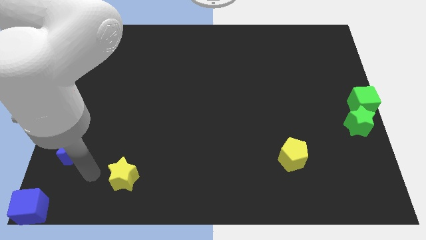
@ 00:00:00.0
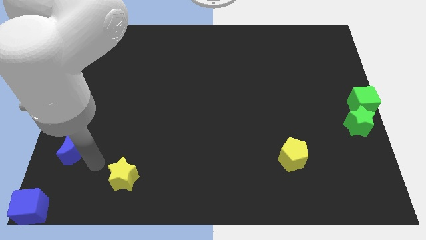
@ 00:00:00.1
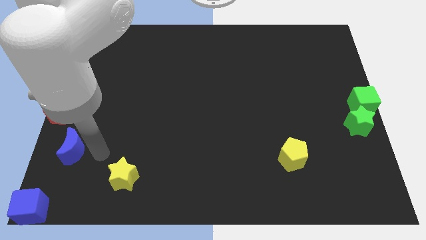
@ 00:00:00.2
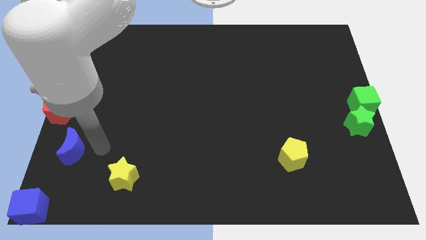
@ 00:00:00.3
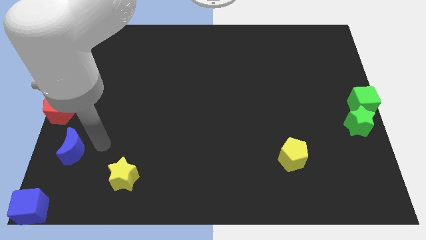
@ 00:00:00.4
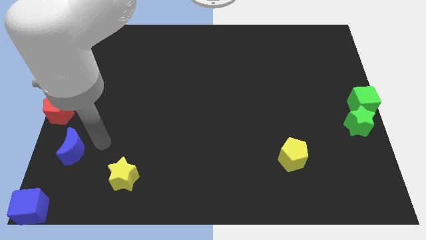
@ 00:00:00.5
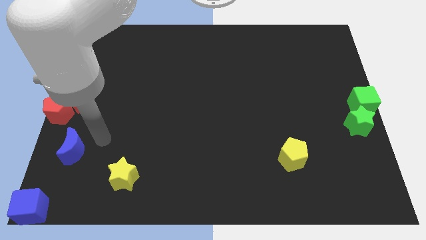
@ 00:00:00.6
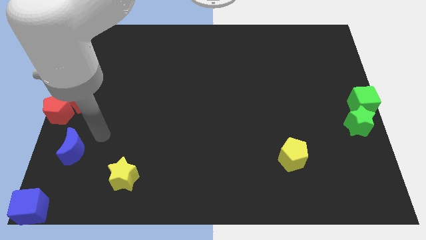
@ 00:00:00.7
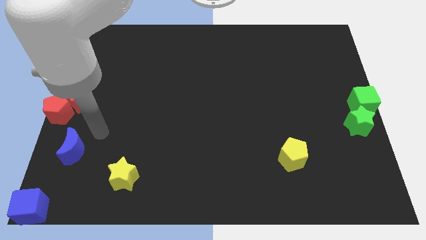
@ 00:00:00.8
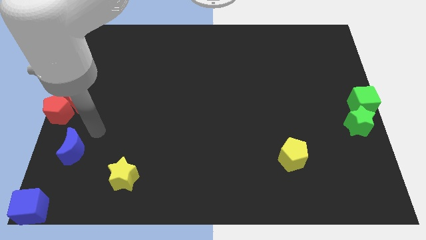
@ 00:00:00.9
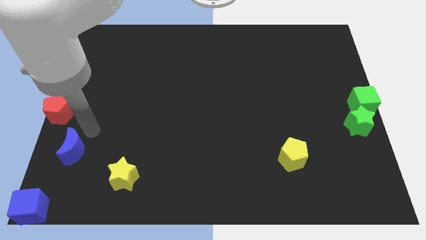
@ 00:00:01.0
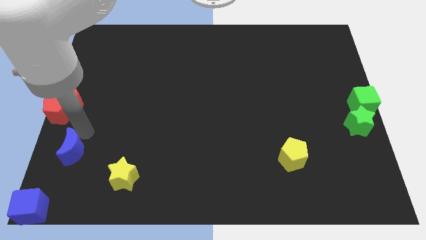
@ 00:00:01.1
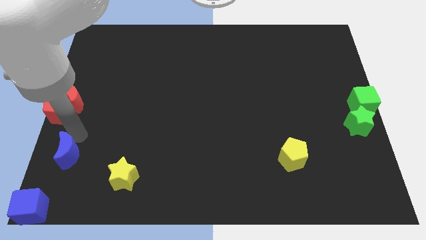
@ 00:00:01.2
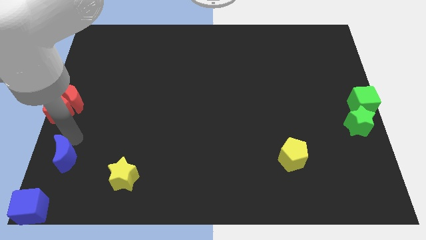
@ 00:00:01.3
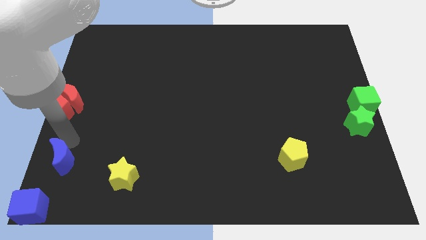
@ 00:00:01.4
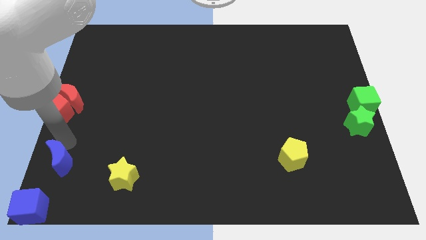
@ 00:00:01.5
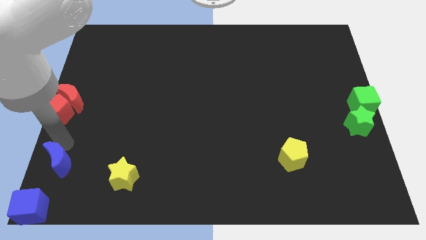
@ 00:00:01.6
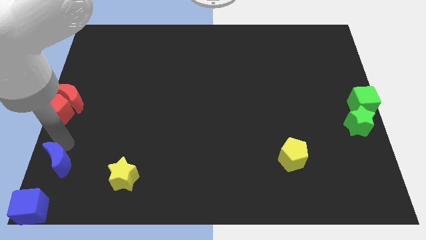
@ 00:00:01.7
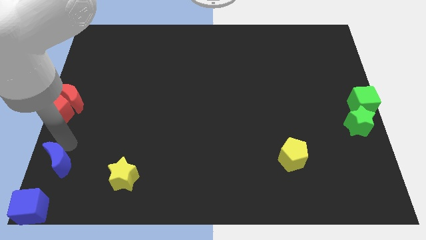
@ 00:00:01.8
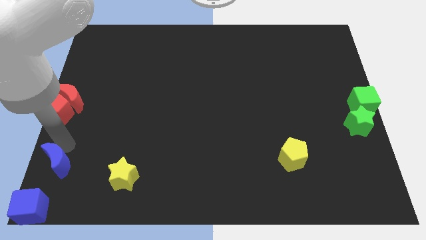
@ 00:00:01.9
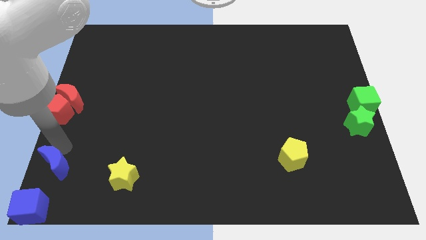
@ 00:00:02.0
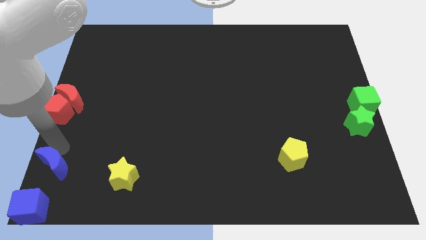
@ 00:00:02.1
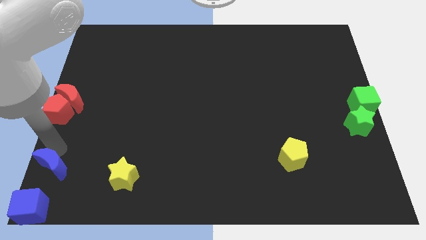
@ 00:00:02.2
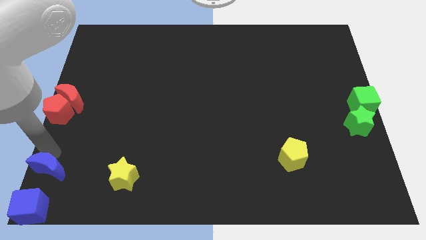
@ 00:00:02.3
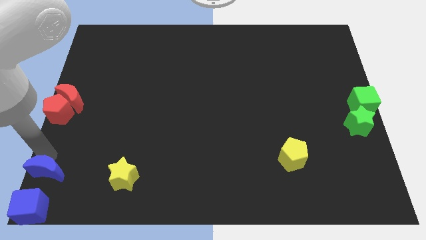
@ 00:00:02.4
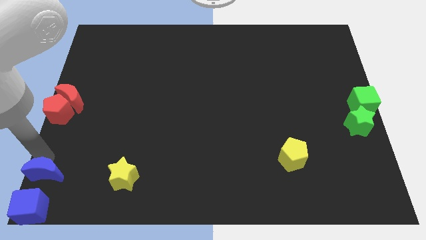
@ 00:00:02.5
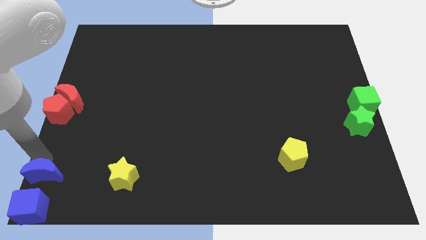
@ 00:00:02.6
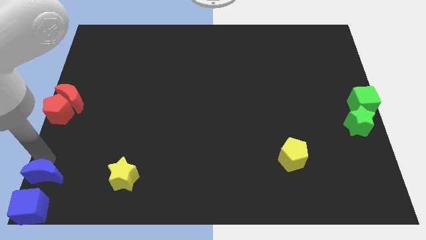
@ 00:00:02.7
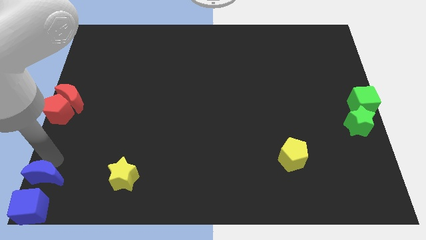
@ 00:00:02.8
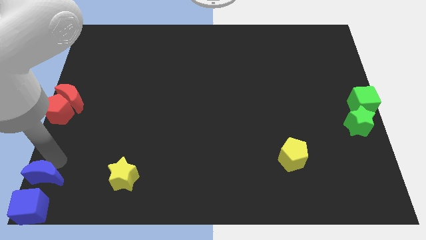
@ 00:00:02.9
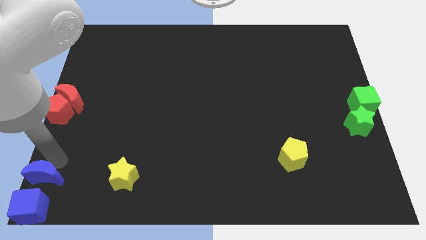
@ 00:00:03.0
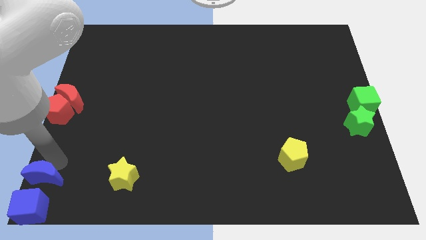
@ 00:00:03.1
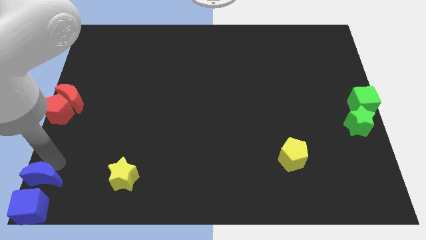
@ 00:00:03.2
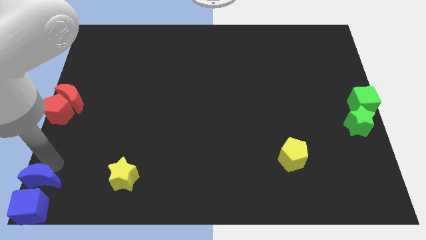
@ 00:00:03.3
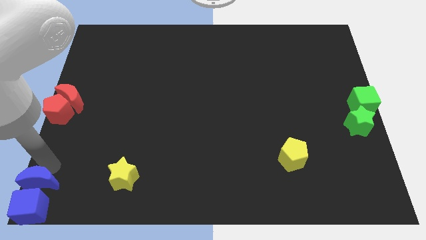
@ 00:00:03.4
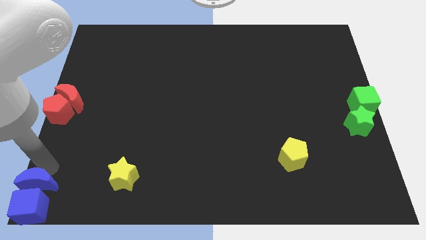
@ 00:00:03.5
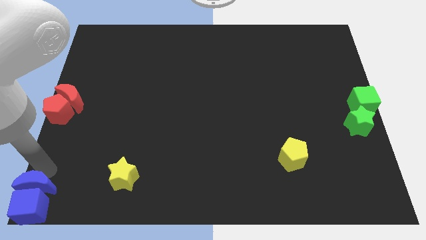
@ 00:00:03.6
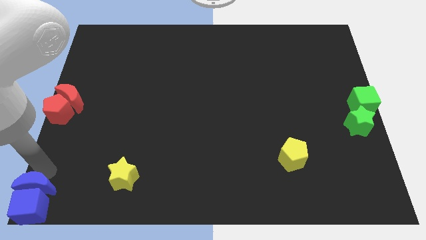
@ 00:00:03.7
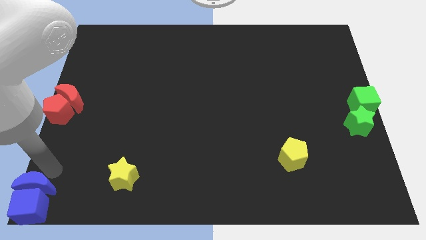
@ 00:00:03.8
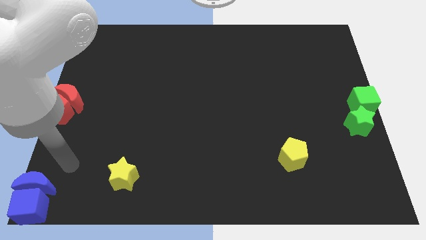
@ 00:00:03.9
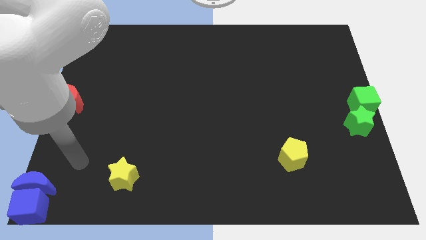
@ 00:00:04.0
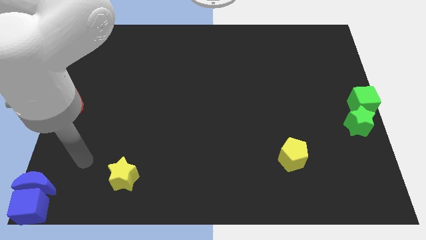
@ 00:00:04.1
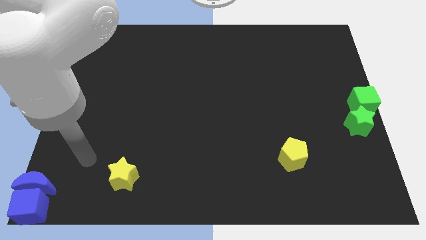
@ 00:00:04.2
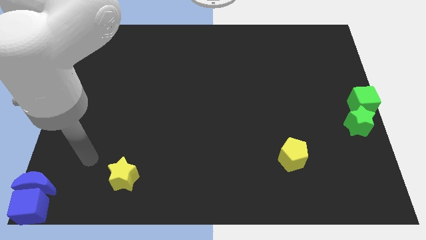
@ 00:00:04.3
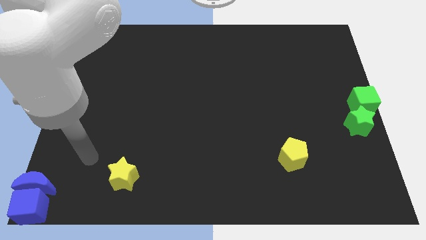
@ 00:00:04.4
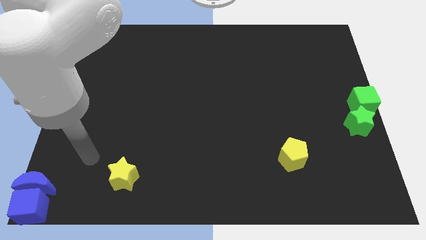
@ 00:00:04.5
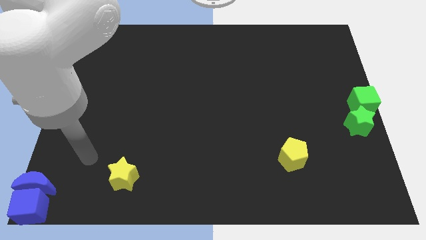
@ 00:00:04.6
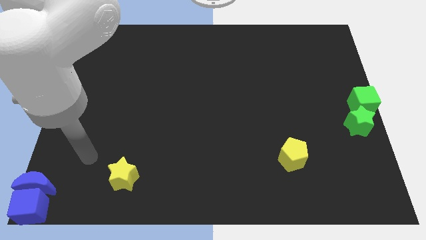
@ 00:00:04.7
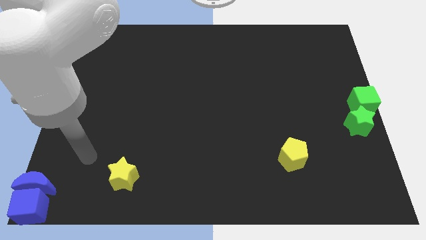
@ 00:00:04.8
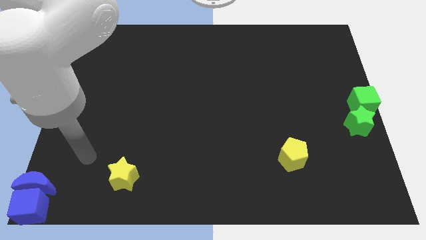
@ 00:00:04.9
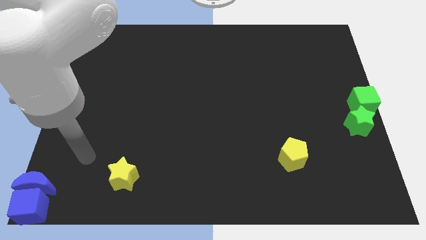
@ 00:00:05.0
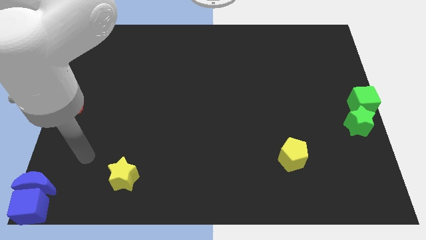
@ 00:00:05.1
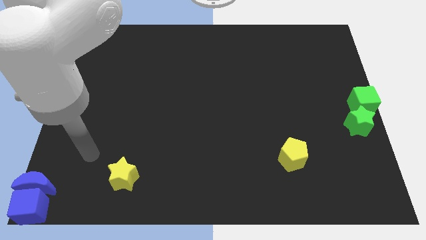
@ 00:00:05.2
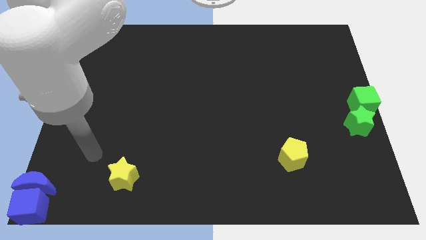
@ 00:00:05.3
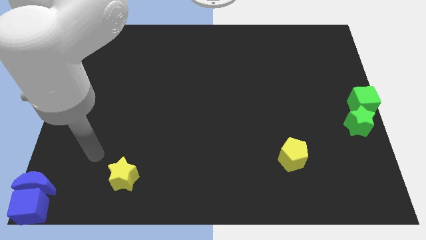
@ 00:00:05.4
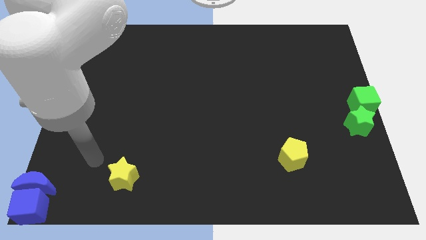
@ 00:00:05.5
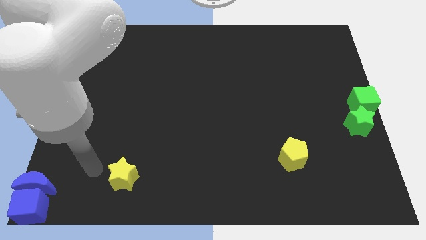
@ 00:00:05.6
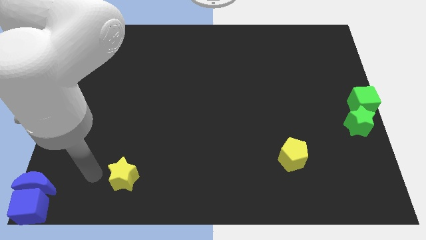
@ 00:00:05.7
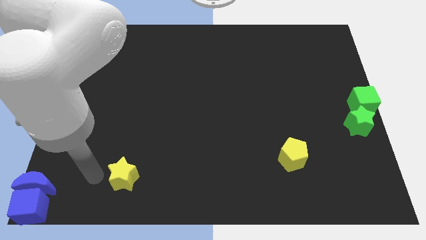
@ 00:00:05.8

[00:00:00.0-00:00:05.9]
put the blue semicircle and blue cube together

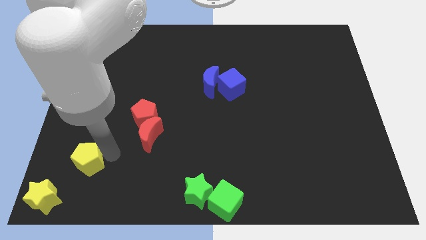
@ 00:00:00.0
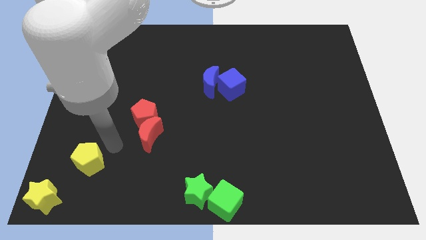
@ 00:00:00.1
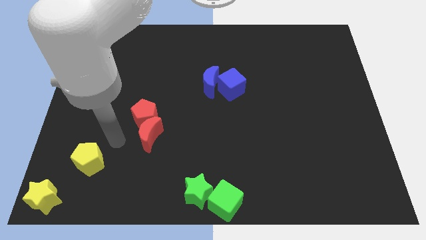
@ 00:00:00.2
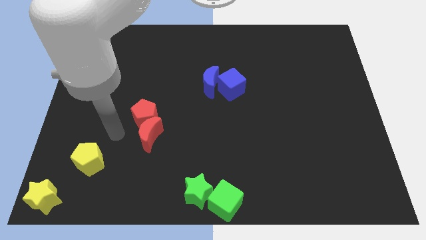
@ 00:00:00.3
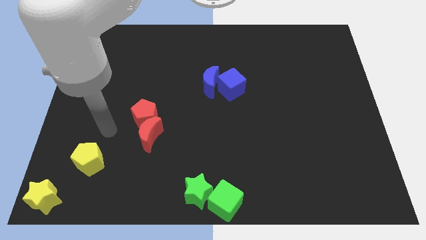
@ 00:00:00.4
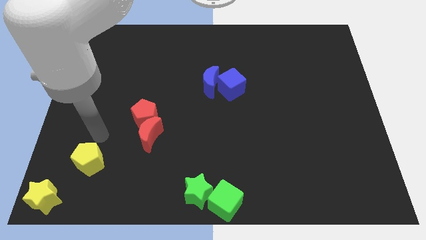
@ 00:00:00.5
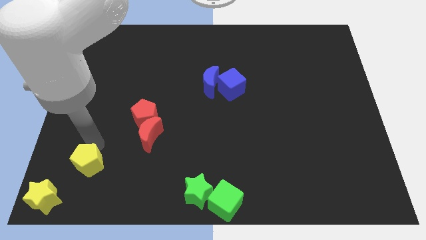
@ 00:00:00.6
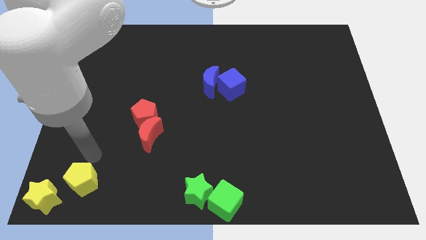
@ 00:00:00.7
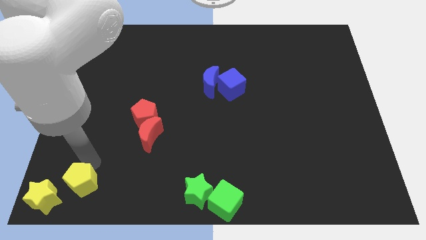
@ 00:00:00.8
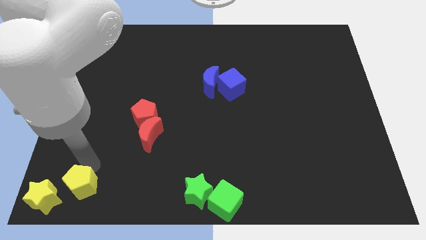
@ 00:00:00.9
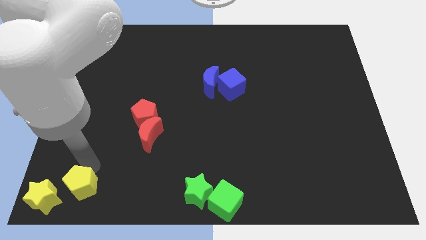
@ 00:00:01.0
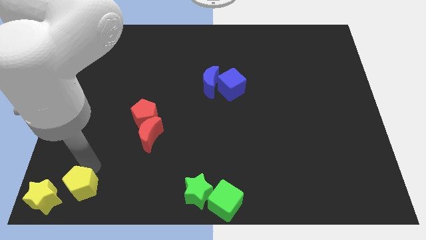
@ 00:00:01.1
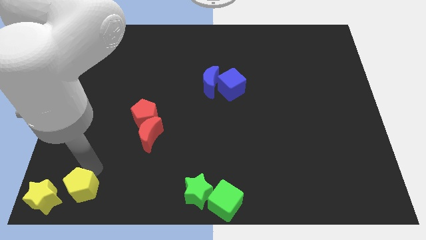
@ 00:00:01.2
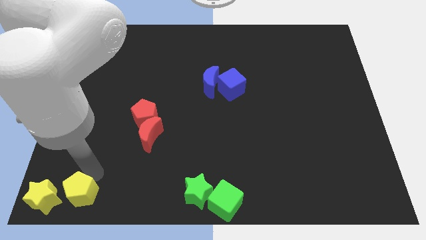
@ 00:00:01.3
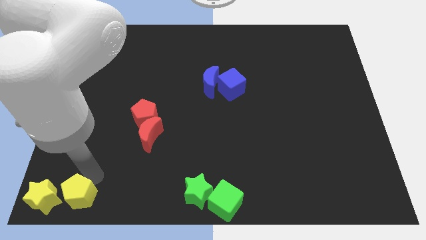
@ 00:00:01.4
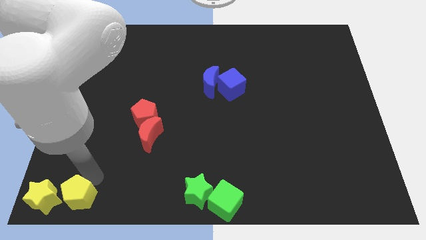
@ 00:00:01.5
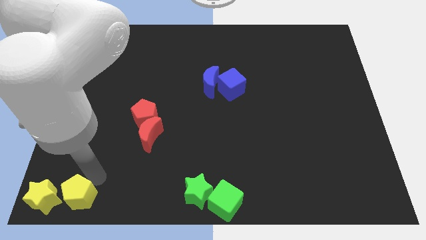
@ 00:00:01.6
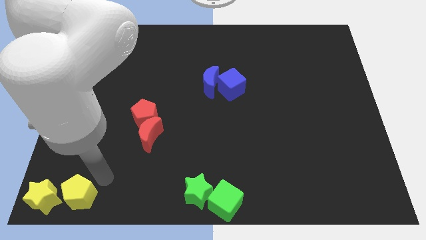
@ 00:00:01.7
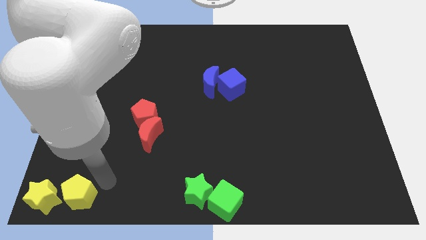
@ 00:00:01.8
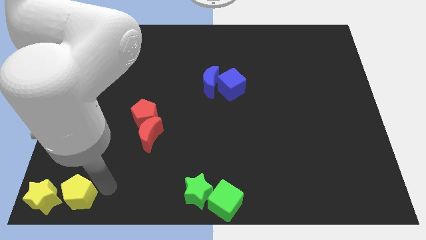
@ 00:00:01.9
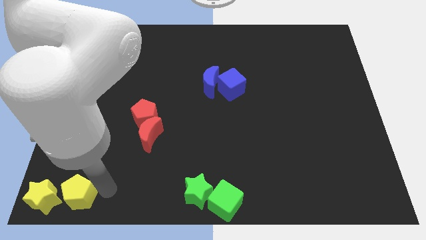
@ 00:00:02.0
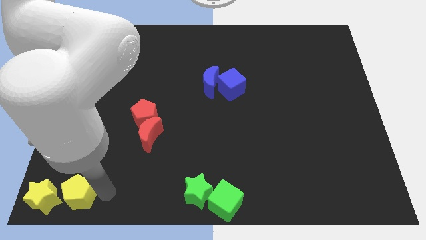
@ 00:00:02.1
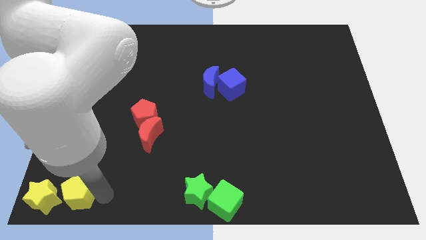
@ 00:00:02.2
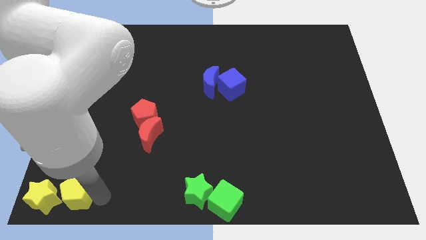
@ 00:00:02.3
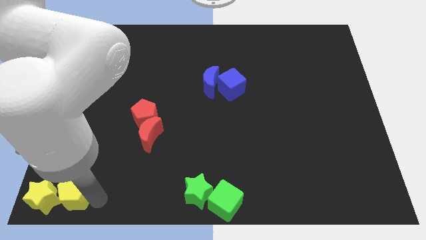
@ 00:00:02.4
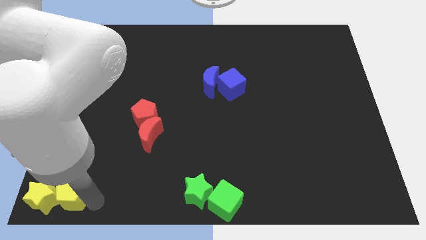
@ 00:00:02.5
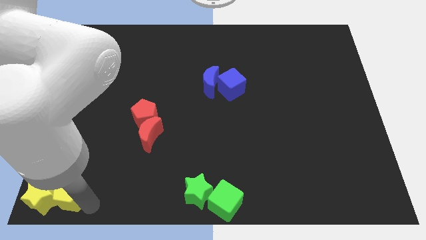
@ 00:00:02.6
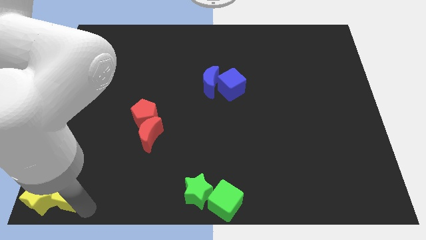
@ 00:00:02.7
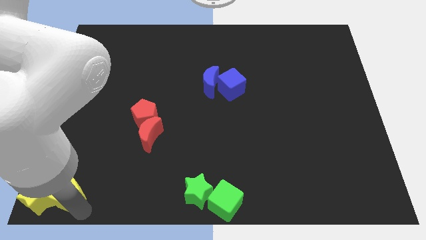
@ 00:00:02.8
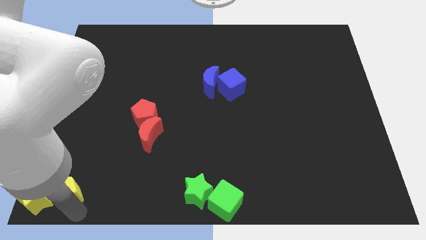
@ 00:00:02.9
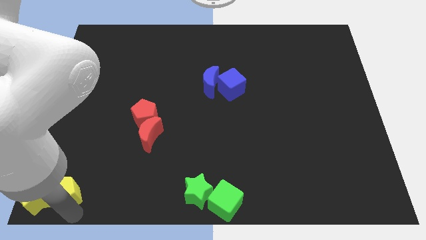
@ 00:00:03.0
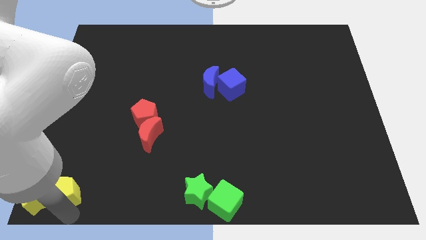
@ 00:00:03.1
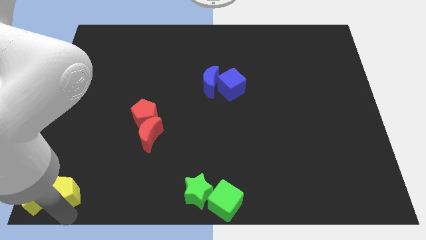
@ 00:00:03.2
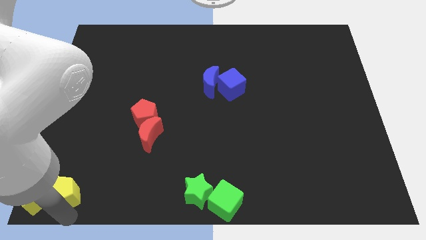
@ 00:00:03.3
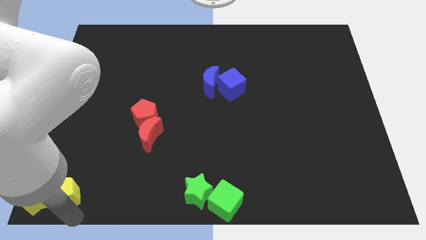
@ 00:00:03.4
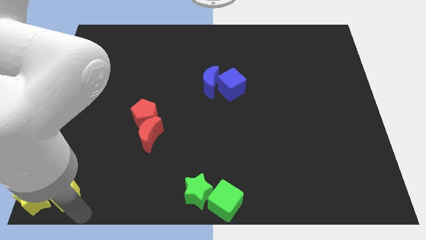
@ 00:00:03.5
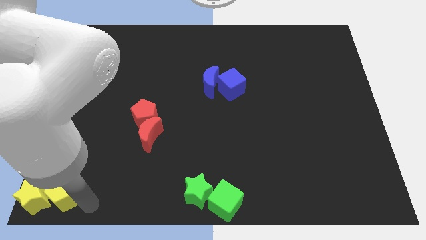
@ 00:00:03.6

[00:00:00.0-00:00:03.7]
push the yellow pentagon to the right of the yellow star
